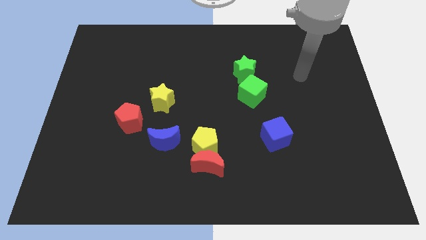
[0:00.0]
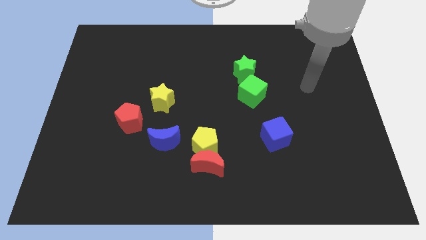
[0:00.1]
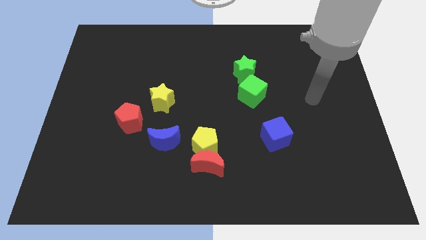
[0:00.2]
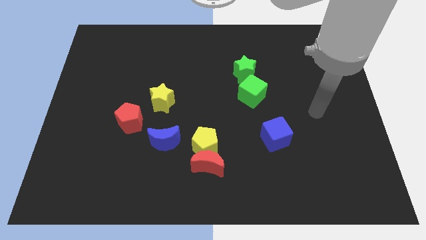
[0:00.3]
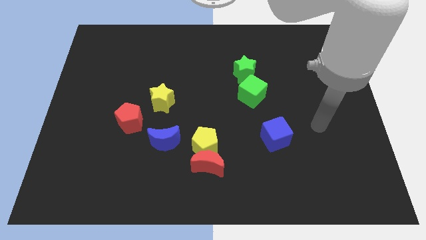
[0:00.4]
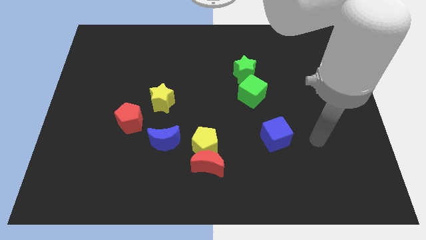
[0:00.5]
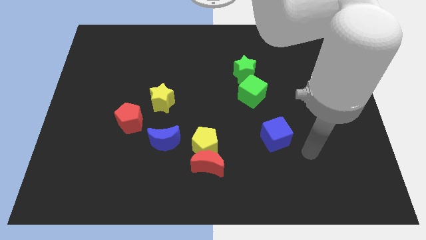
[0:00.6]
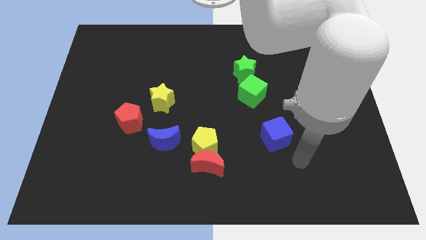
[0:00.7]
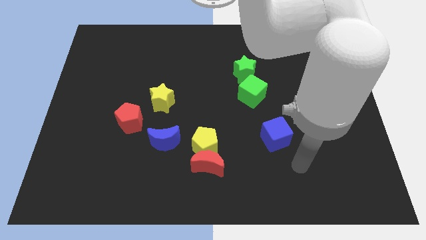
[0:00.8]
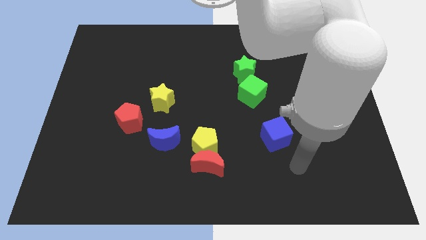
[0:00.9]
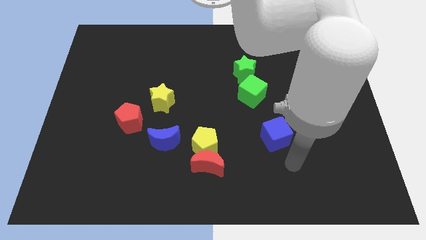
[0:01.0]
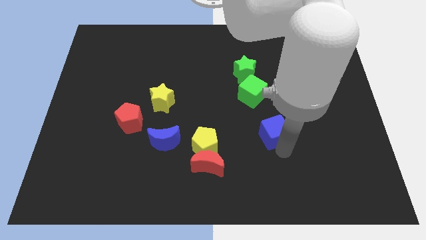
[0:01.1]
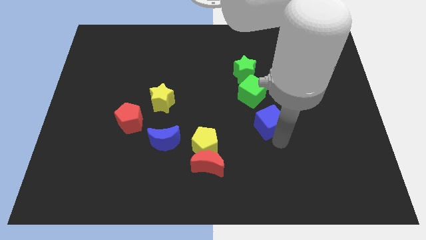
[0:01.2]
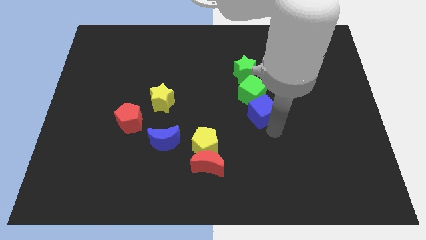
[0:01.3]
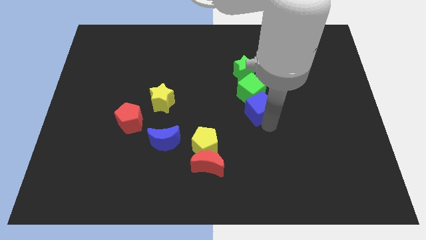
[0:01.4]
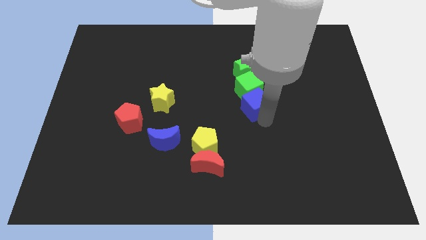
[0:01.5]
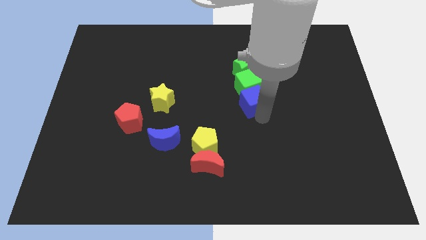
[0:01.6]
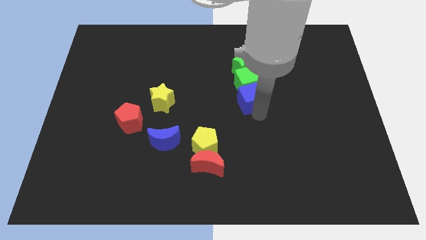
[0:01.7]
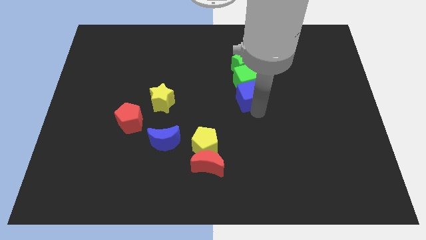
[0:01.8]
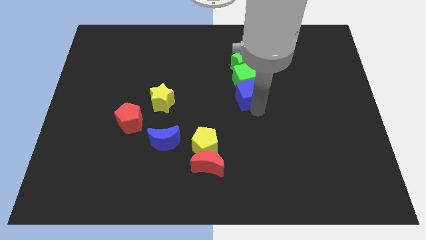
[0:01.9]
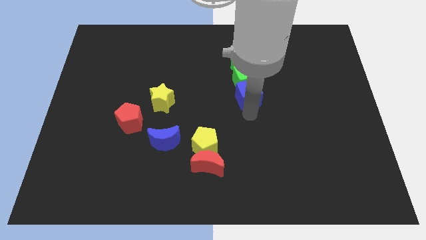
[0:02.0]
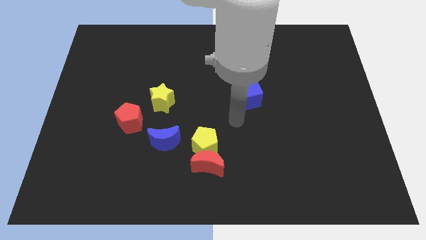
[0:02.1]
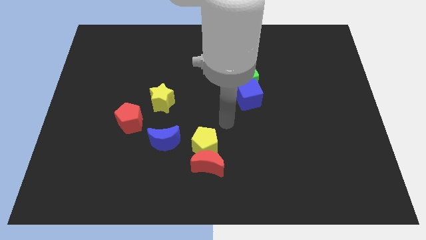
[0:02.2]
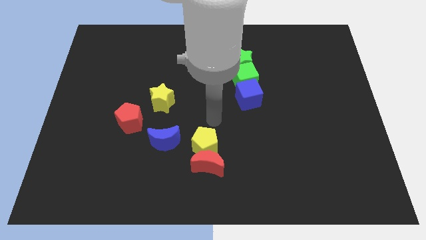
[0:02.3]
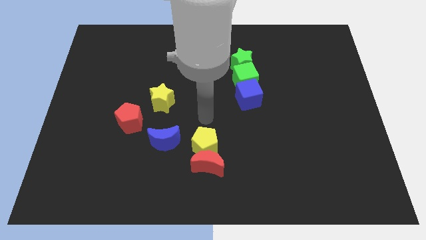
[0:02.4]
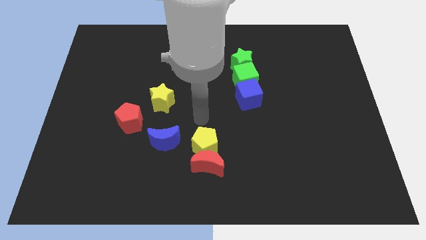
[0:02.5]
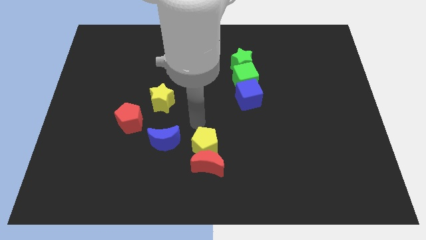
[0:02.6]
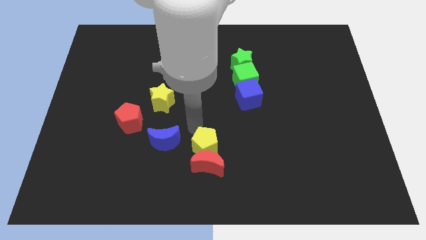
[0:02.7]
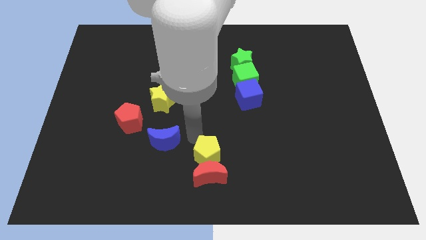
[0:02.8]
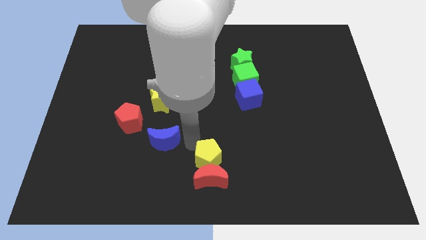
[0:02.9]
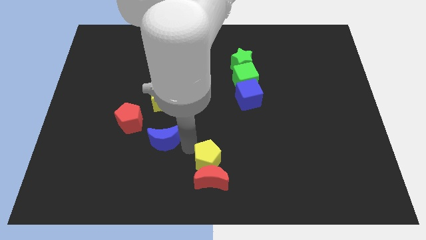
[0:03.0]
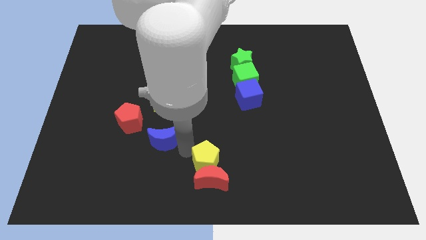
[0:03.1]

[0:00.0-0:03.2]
push the blue cube into the green cube

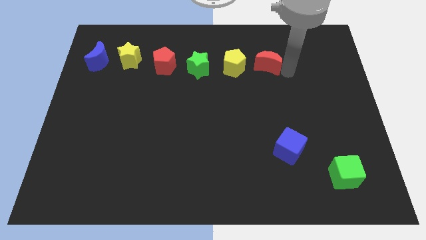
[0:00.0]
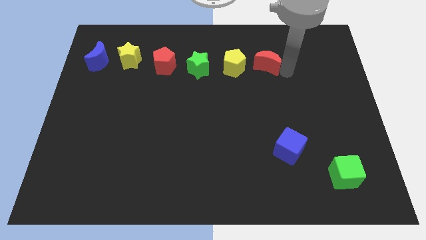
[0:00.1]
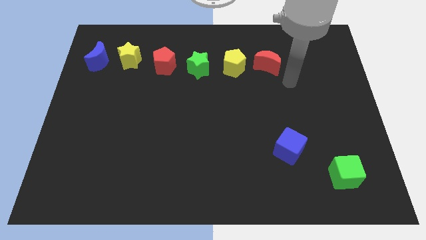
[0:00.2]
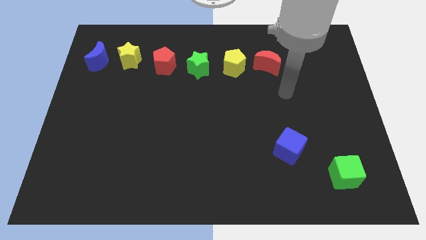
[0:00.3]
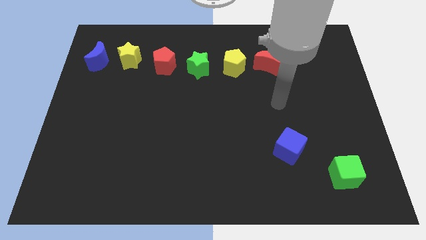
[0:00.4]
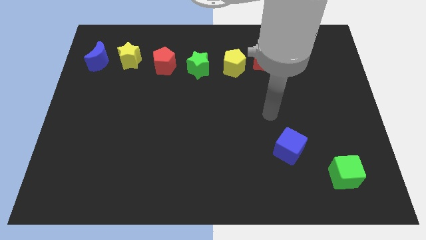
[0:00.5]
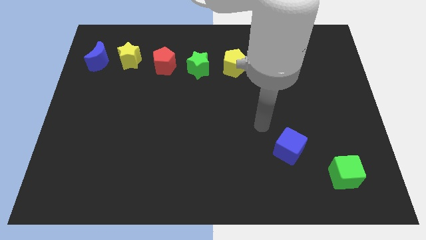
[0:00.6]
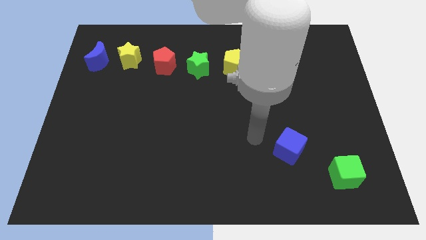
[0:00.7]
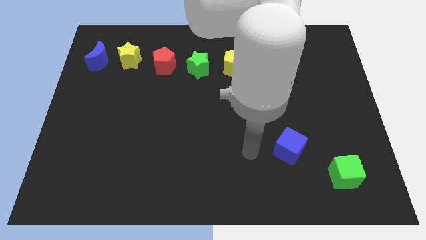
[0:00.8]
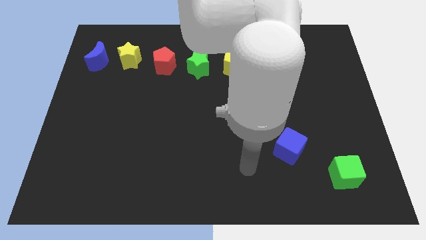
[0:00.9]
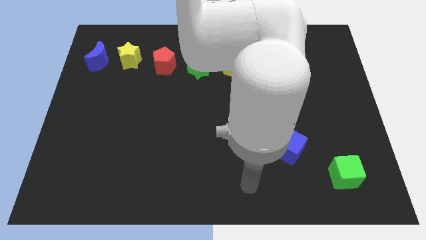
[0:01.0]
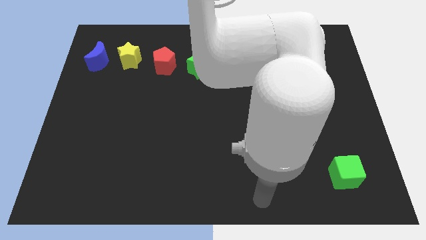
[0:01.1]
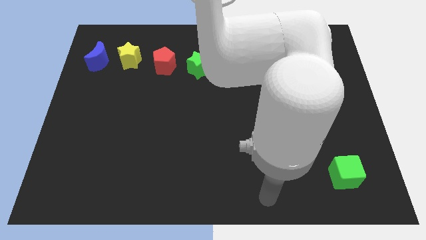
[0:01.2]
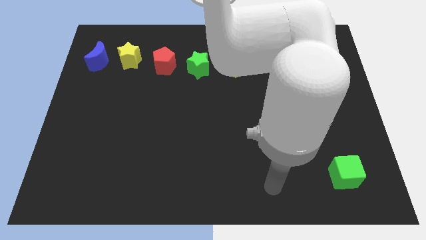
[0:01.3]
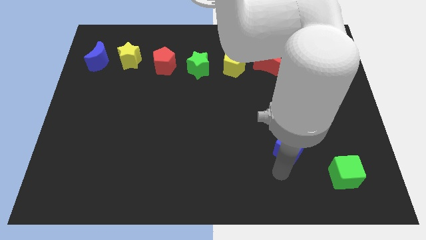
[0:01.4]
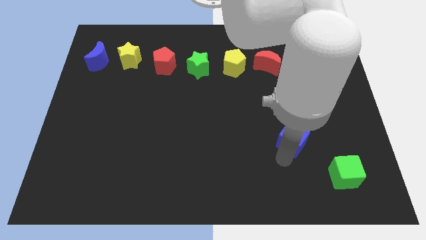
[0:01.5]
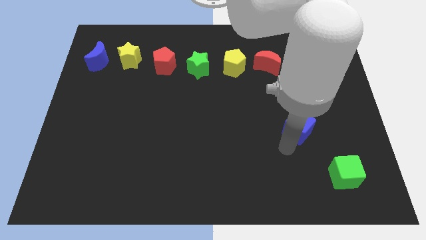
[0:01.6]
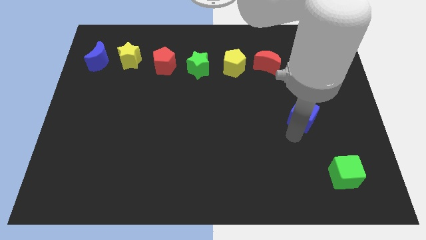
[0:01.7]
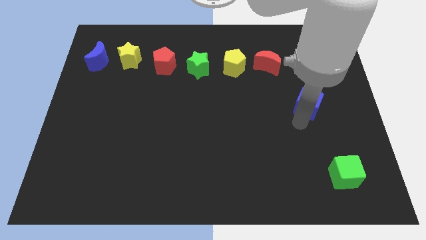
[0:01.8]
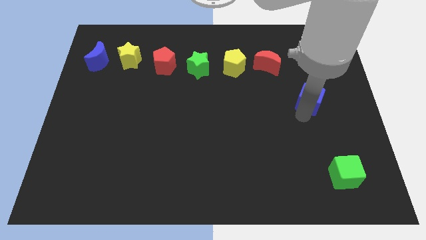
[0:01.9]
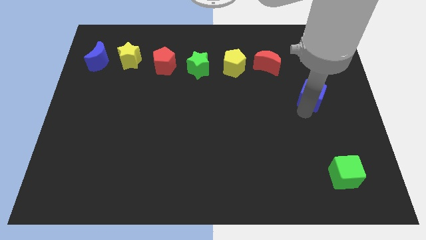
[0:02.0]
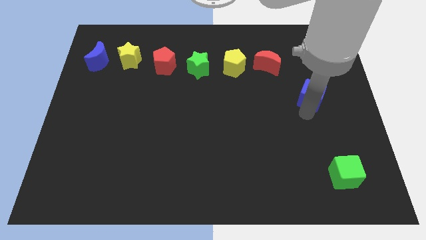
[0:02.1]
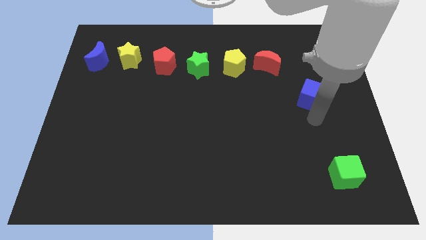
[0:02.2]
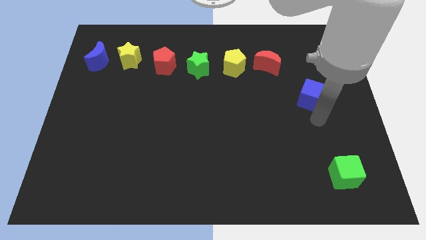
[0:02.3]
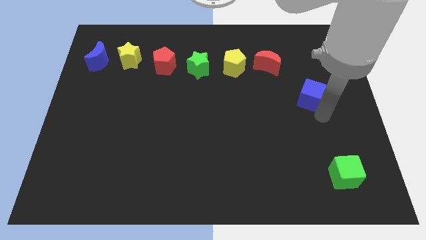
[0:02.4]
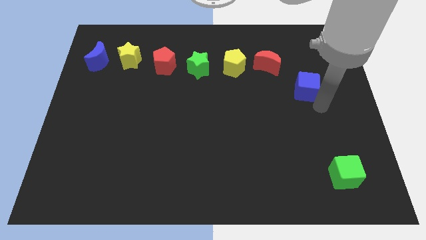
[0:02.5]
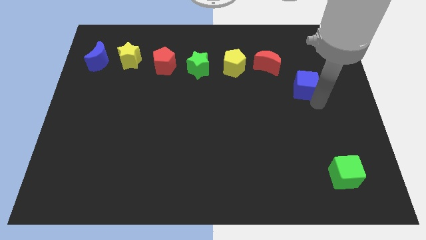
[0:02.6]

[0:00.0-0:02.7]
push blue cube diagonally upwards

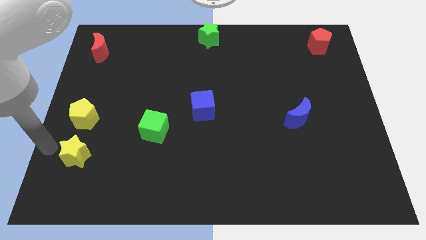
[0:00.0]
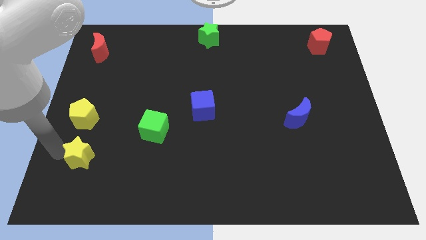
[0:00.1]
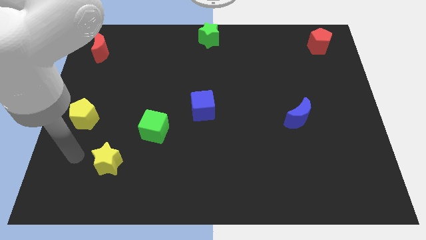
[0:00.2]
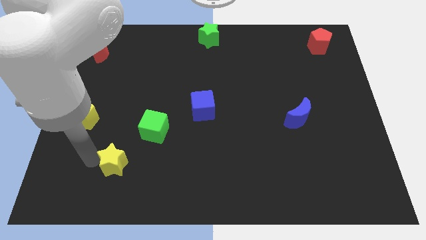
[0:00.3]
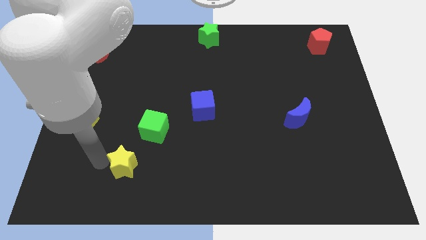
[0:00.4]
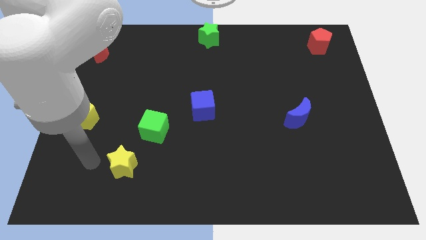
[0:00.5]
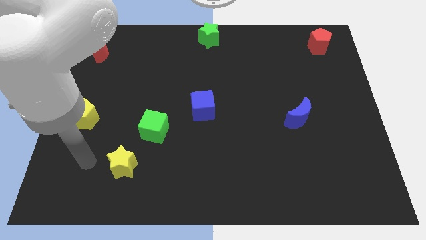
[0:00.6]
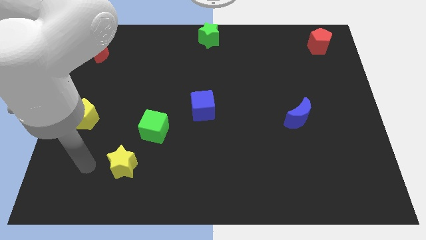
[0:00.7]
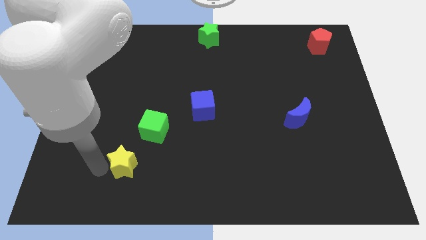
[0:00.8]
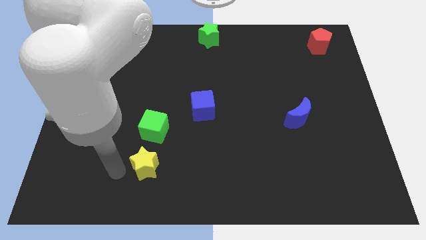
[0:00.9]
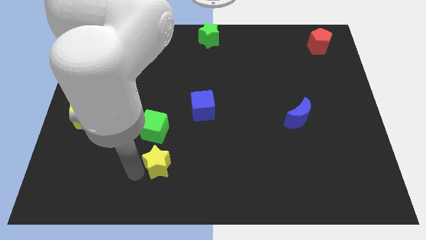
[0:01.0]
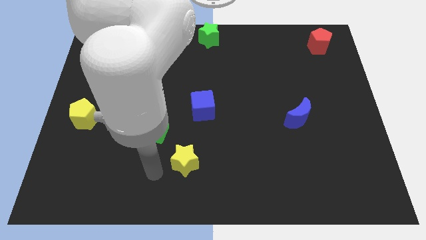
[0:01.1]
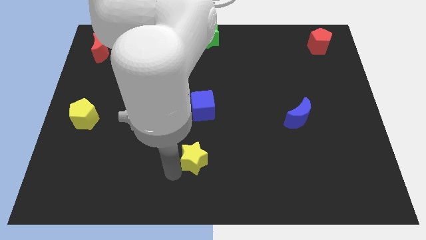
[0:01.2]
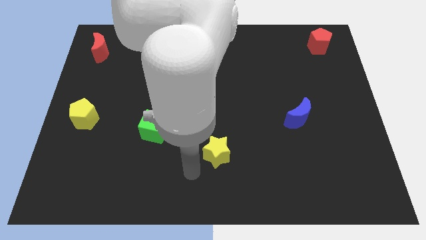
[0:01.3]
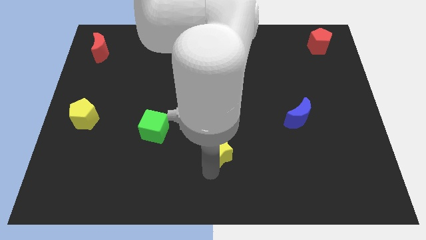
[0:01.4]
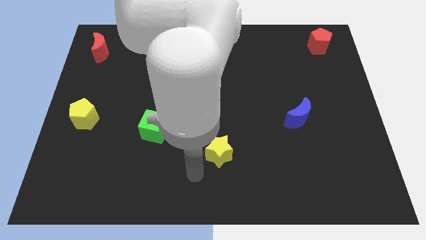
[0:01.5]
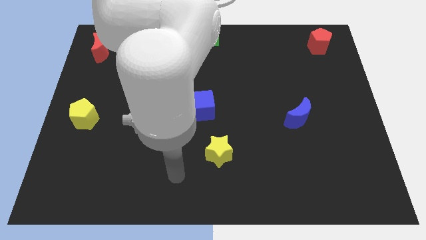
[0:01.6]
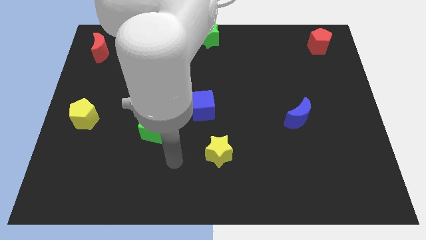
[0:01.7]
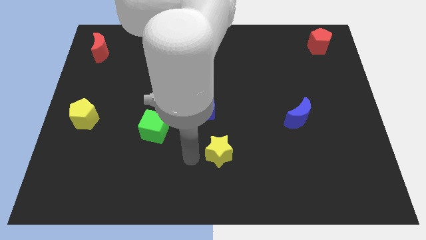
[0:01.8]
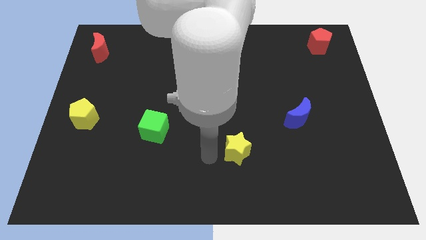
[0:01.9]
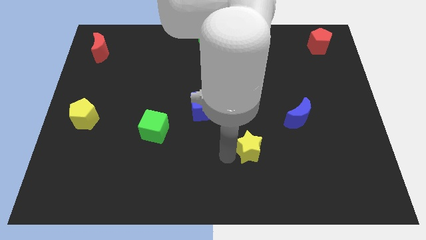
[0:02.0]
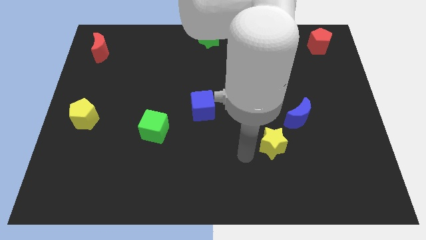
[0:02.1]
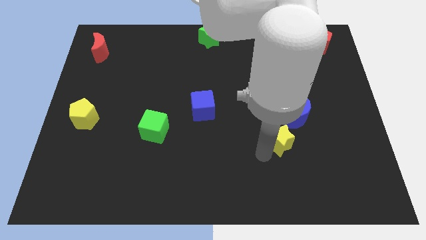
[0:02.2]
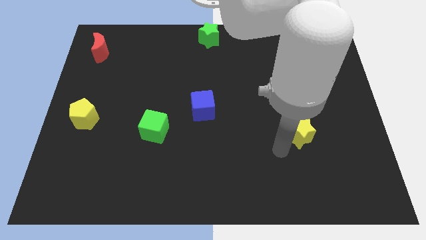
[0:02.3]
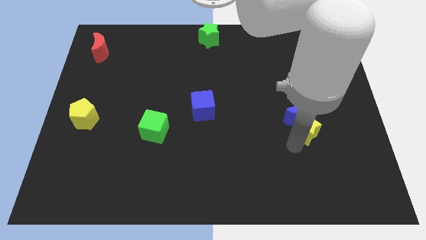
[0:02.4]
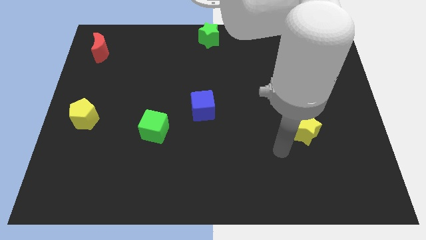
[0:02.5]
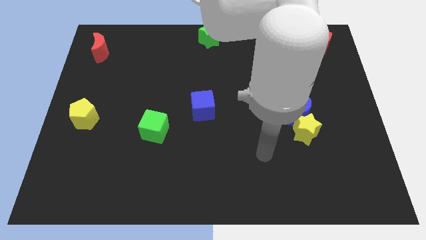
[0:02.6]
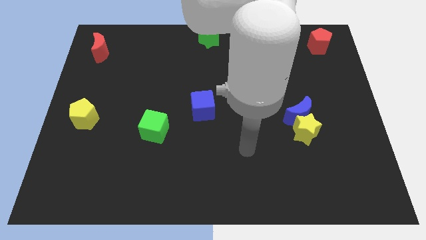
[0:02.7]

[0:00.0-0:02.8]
place yellow star below blue moon

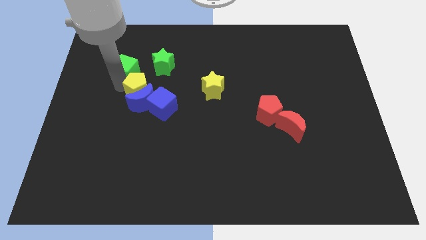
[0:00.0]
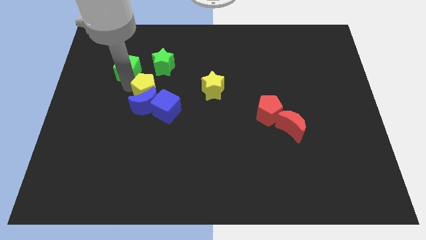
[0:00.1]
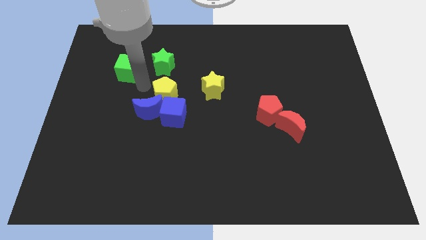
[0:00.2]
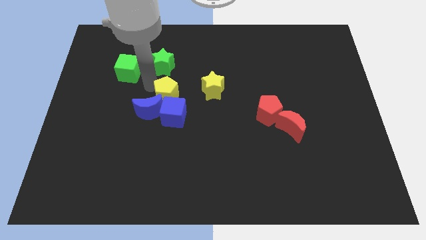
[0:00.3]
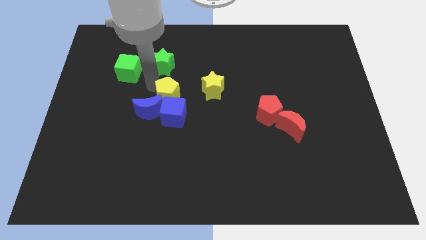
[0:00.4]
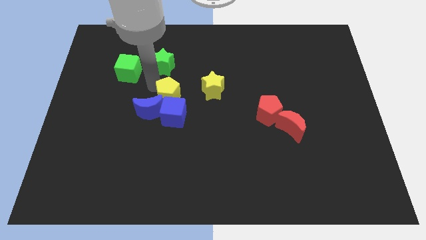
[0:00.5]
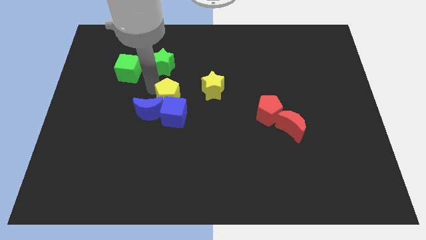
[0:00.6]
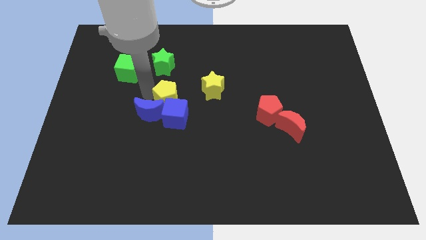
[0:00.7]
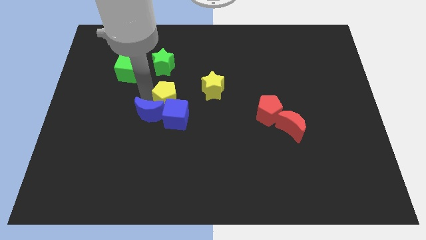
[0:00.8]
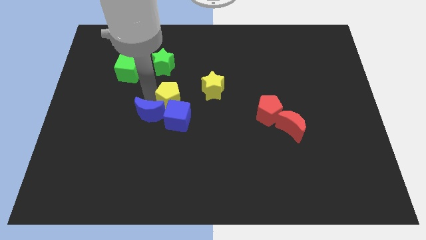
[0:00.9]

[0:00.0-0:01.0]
push a group of blocks to the center
